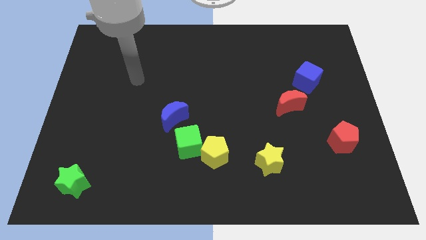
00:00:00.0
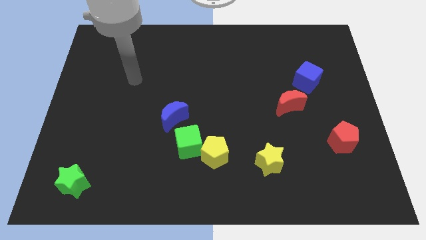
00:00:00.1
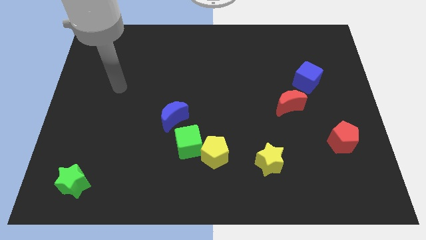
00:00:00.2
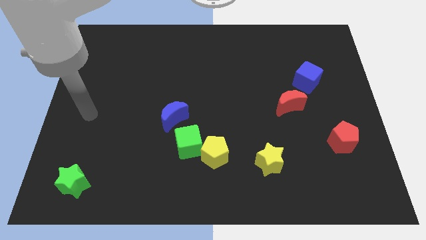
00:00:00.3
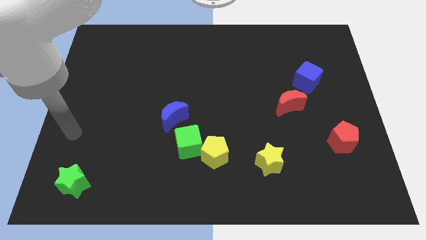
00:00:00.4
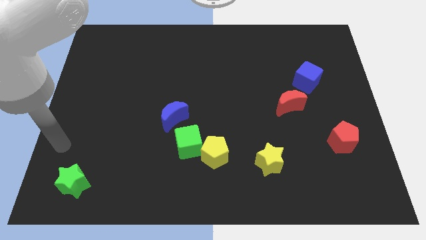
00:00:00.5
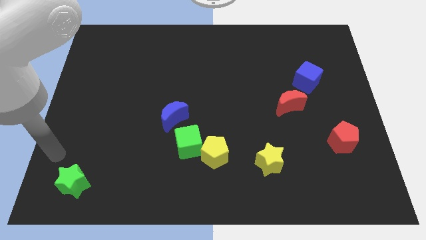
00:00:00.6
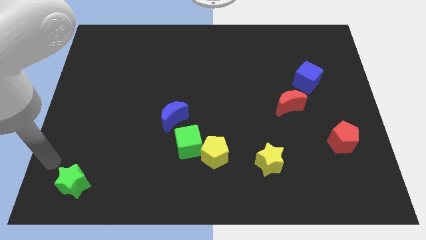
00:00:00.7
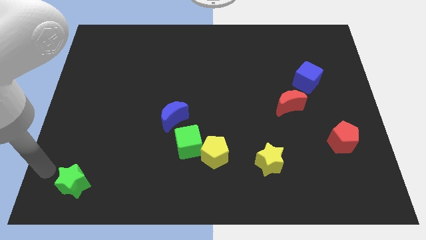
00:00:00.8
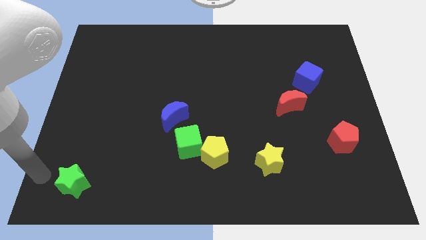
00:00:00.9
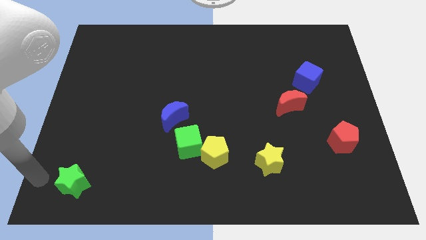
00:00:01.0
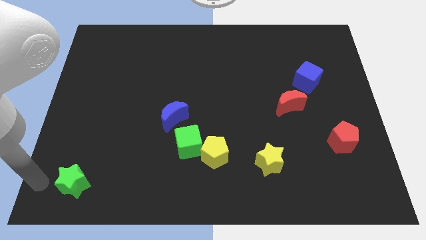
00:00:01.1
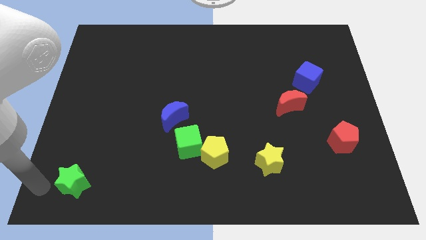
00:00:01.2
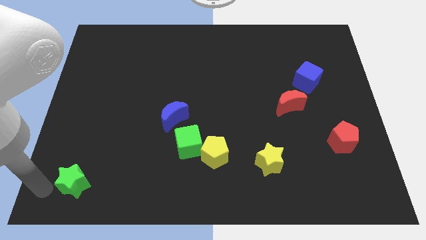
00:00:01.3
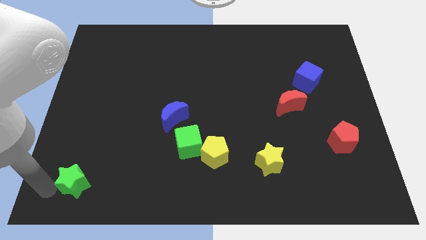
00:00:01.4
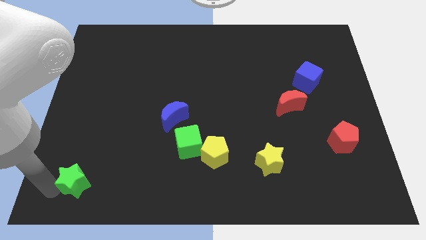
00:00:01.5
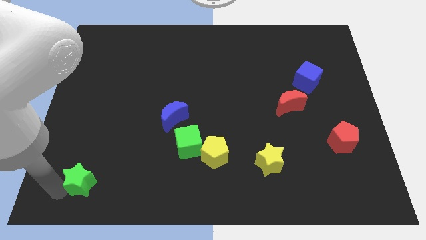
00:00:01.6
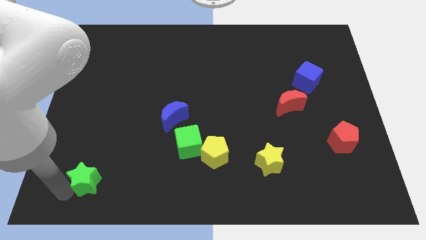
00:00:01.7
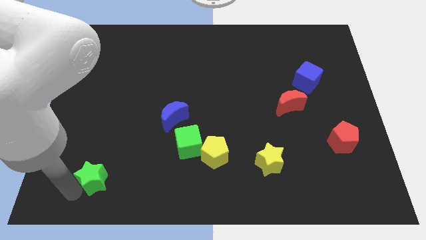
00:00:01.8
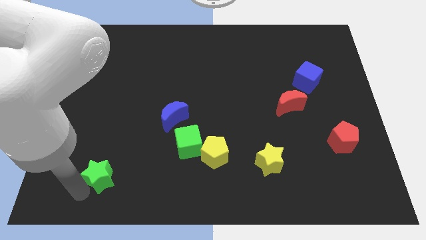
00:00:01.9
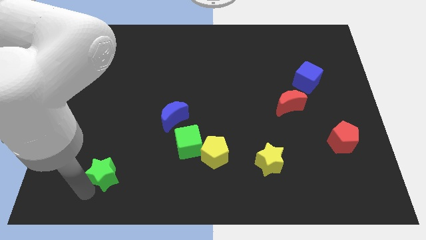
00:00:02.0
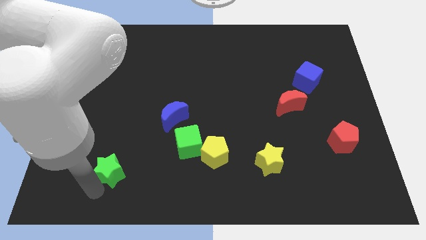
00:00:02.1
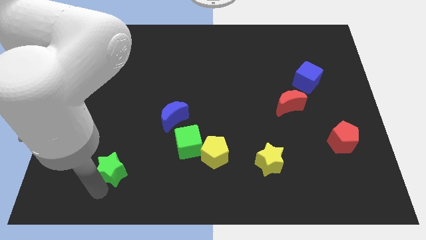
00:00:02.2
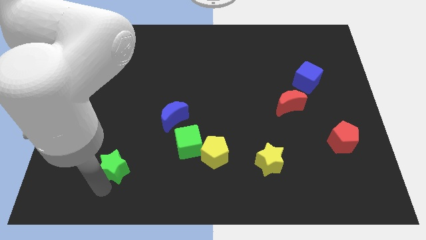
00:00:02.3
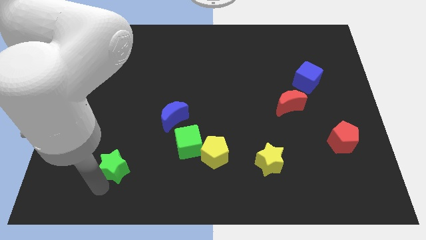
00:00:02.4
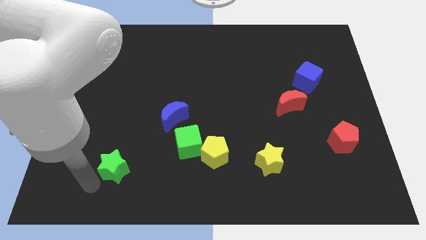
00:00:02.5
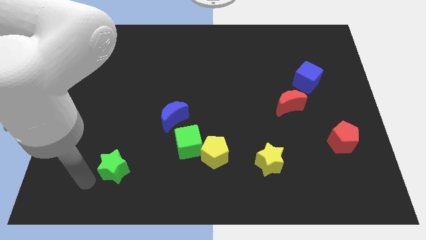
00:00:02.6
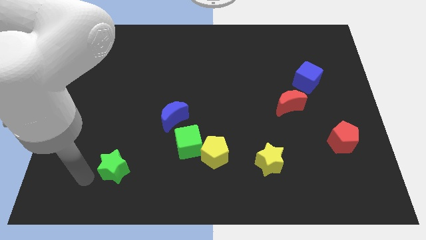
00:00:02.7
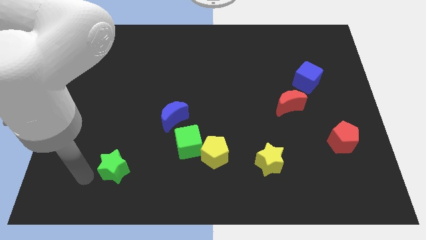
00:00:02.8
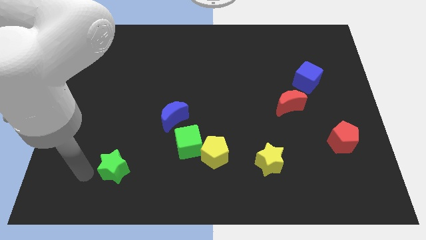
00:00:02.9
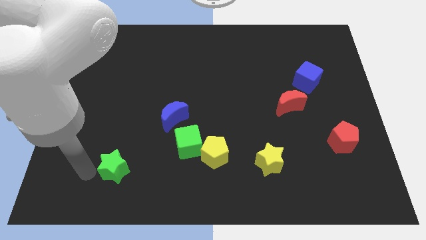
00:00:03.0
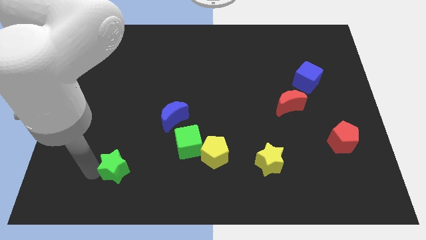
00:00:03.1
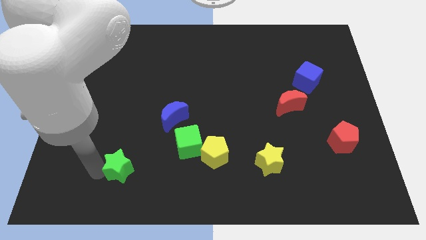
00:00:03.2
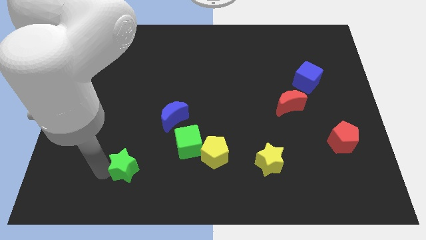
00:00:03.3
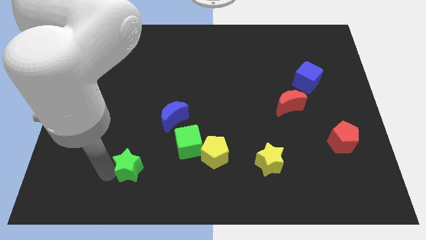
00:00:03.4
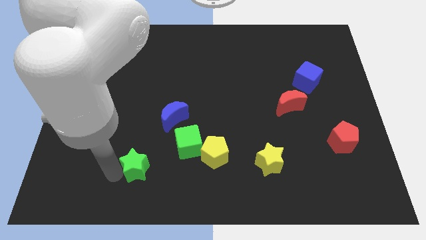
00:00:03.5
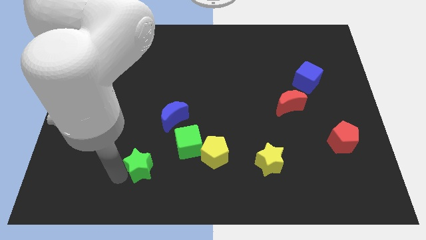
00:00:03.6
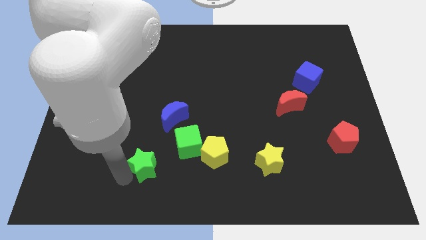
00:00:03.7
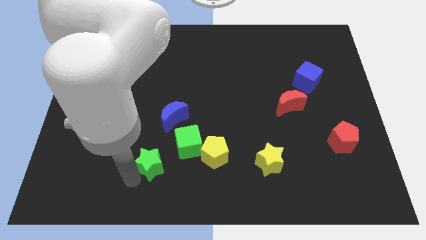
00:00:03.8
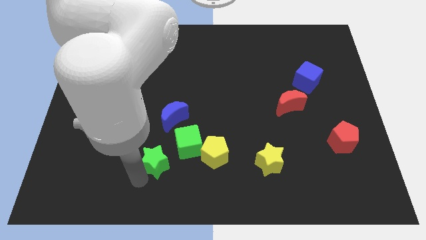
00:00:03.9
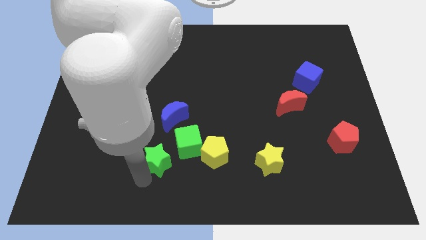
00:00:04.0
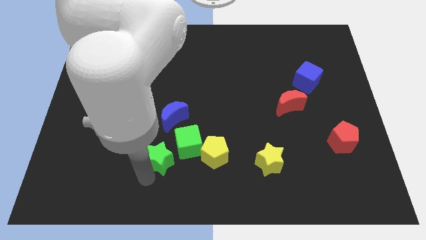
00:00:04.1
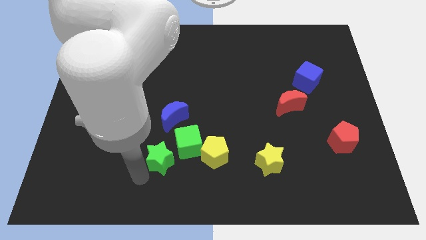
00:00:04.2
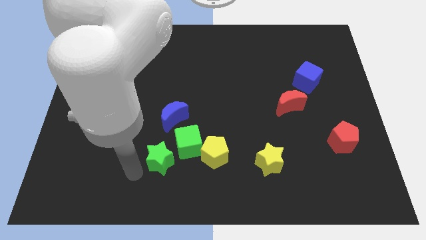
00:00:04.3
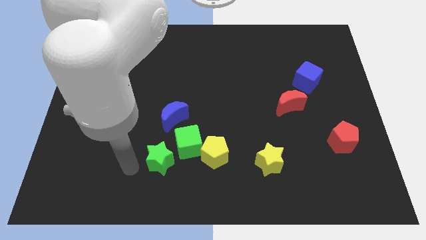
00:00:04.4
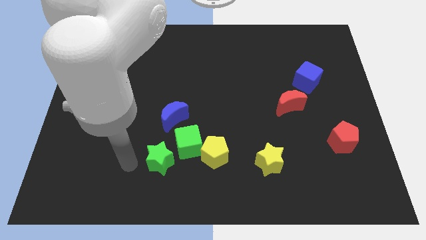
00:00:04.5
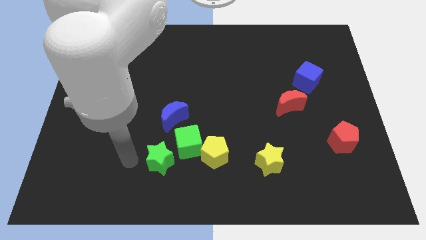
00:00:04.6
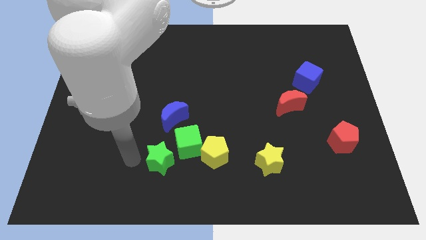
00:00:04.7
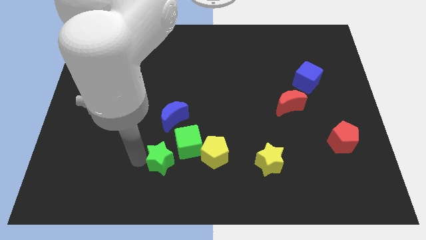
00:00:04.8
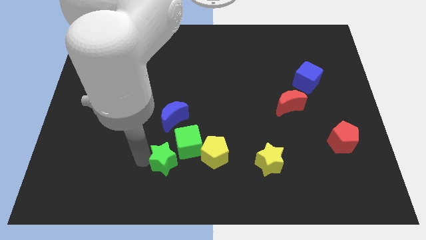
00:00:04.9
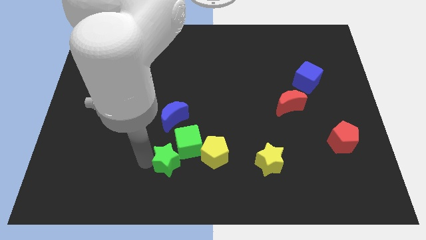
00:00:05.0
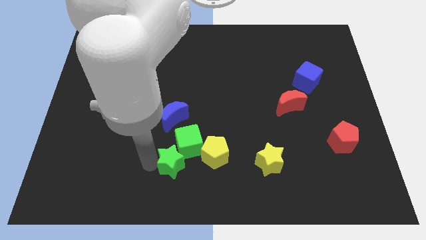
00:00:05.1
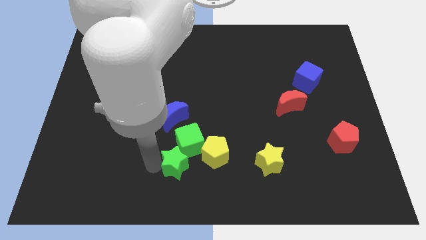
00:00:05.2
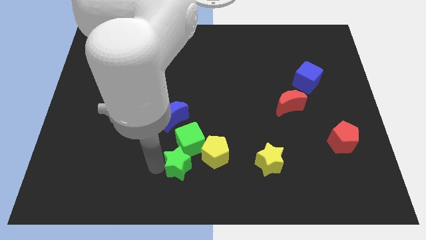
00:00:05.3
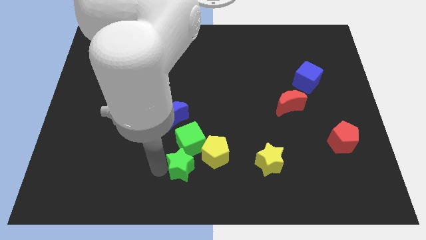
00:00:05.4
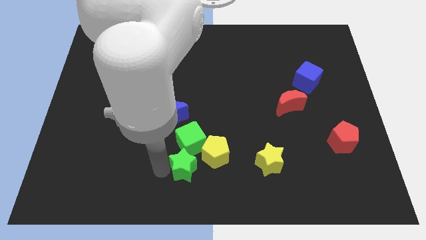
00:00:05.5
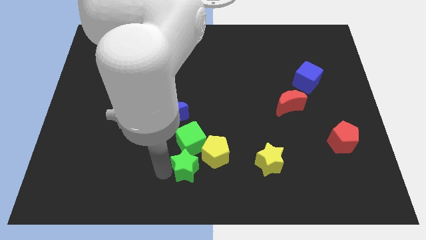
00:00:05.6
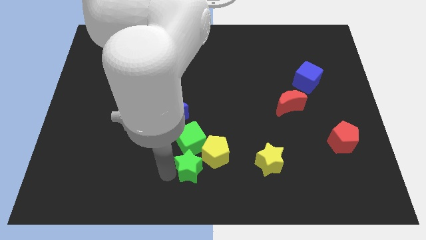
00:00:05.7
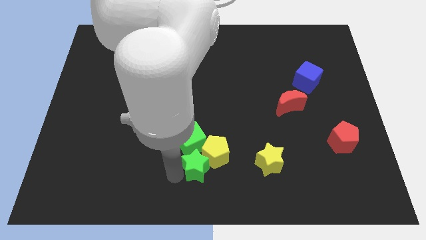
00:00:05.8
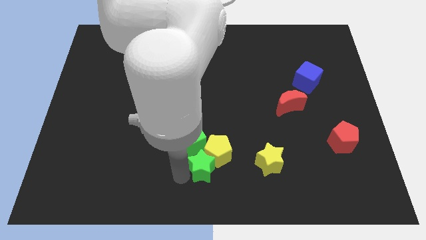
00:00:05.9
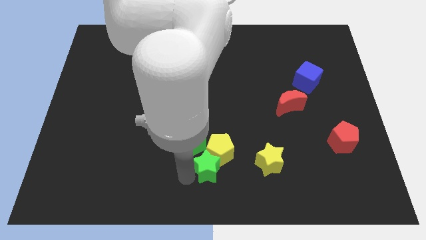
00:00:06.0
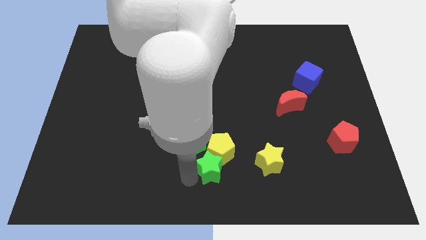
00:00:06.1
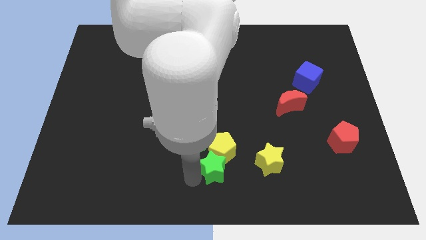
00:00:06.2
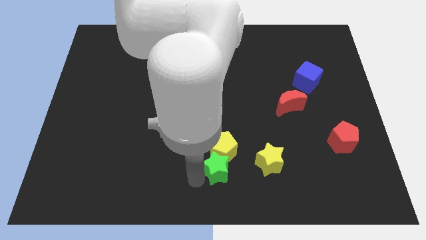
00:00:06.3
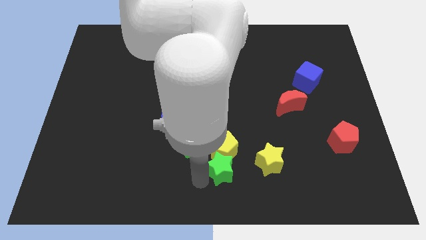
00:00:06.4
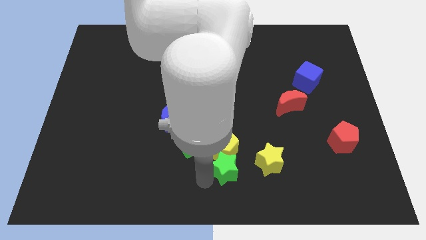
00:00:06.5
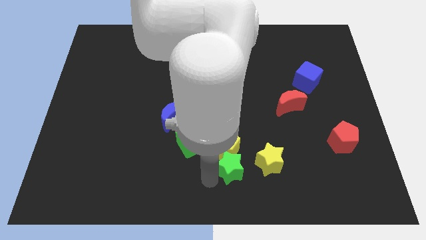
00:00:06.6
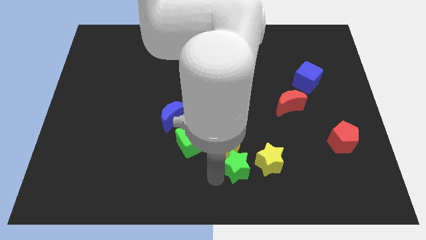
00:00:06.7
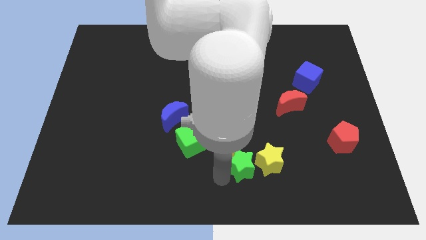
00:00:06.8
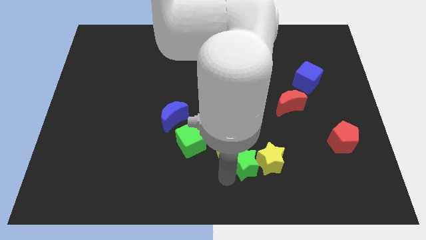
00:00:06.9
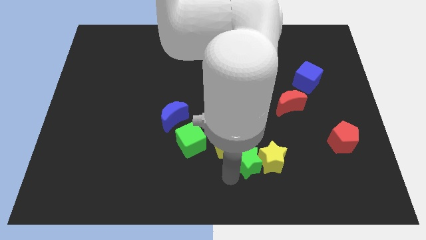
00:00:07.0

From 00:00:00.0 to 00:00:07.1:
slide the green star to the yellow star

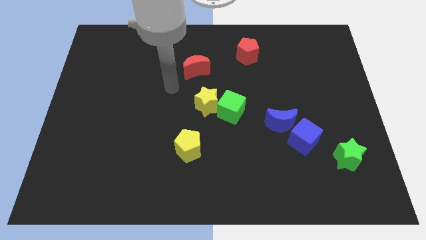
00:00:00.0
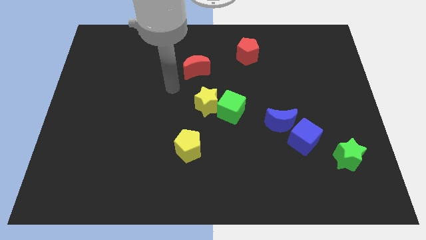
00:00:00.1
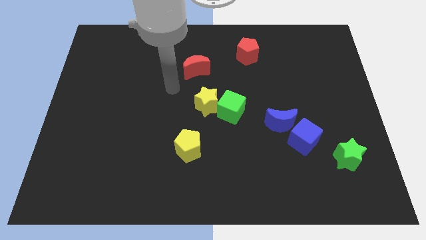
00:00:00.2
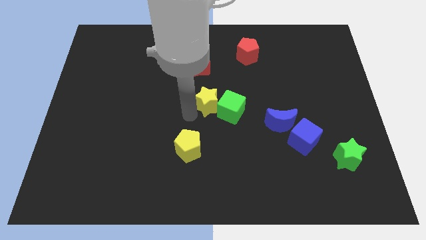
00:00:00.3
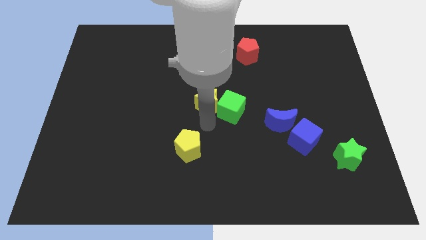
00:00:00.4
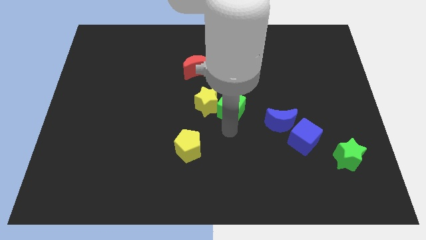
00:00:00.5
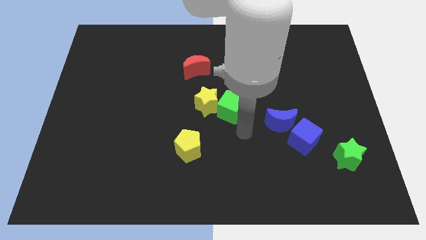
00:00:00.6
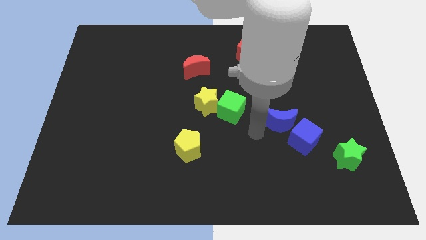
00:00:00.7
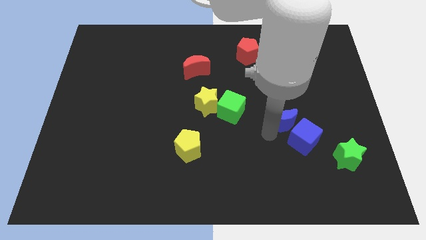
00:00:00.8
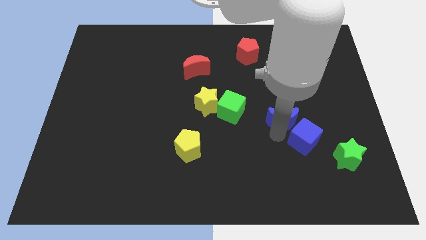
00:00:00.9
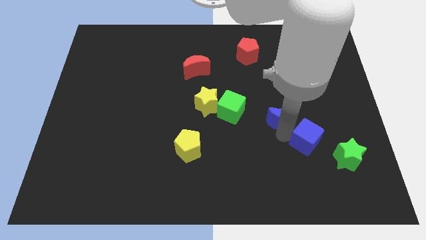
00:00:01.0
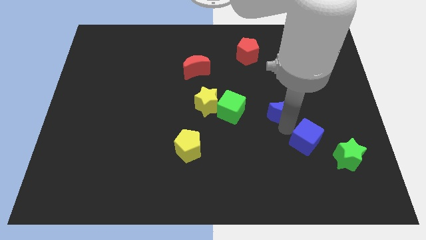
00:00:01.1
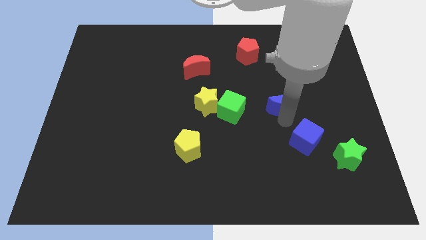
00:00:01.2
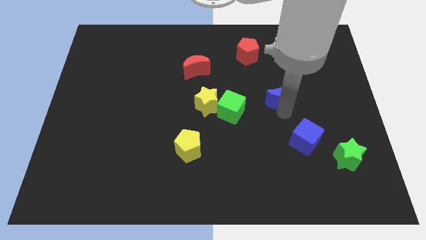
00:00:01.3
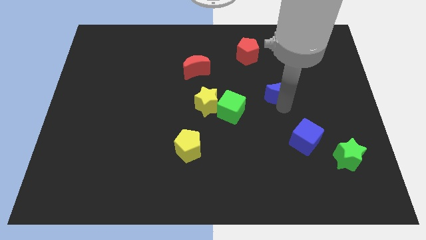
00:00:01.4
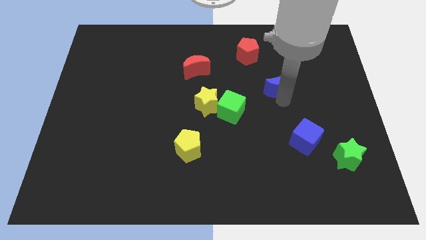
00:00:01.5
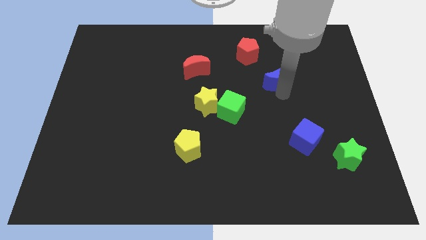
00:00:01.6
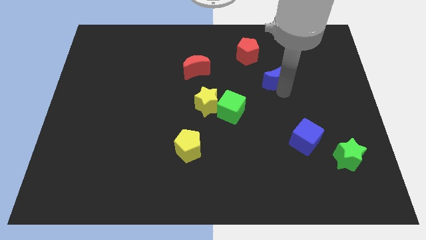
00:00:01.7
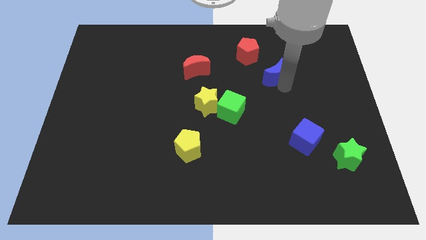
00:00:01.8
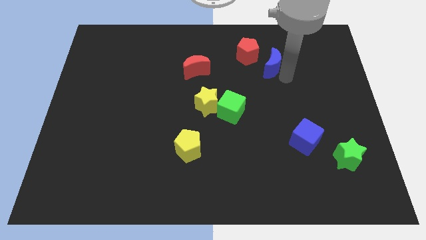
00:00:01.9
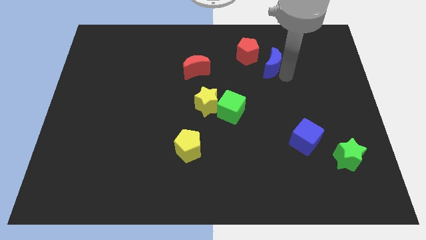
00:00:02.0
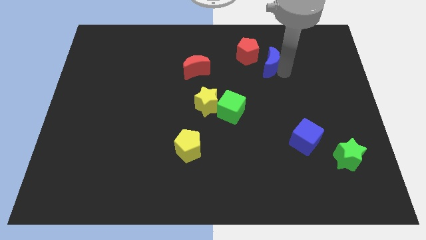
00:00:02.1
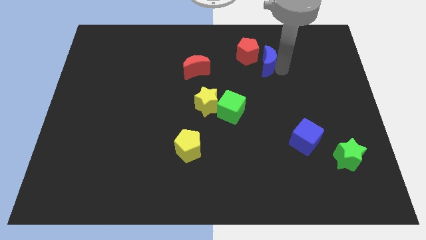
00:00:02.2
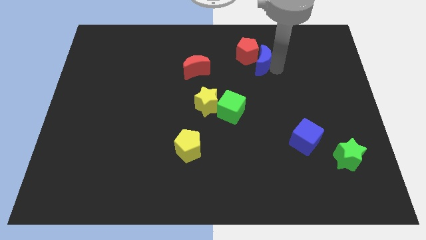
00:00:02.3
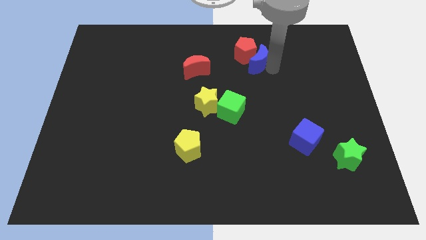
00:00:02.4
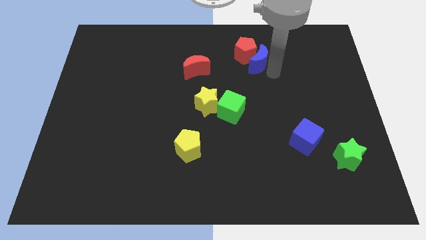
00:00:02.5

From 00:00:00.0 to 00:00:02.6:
slide the blue moon close to the red pentagon
